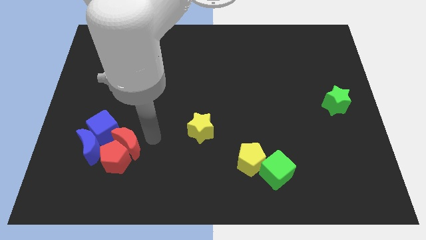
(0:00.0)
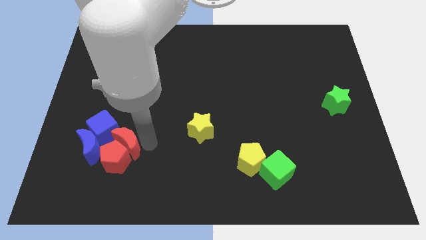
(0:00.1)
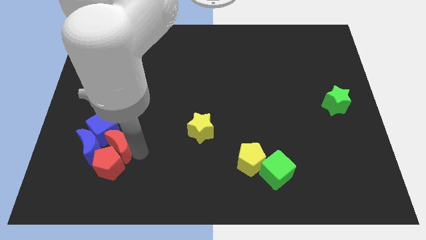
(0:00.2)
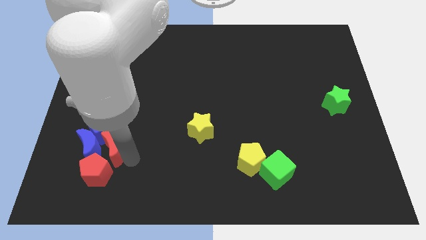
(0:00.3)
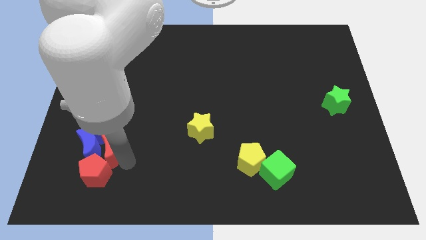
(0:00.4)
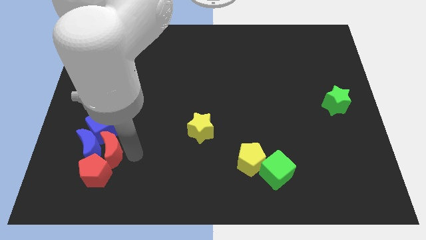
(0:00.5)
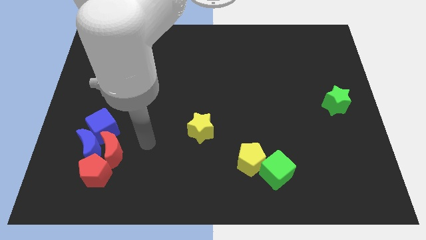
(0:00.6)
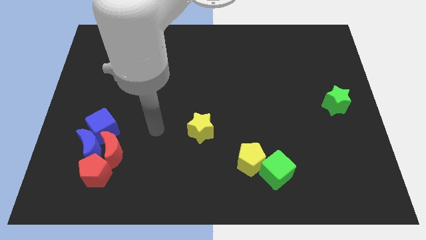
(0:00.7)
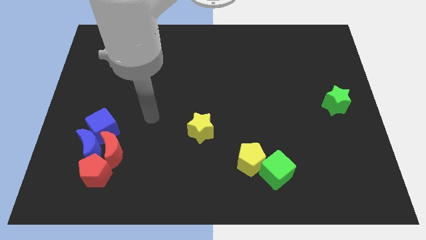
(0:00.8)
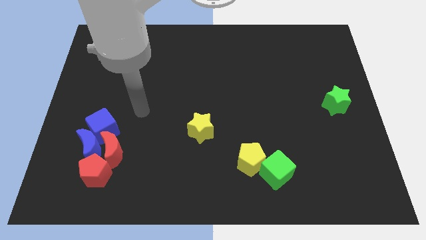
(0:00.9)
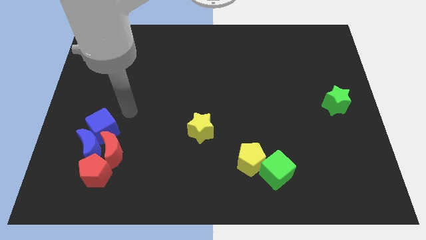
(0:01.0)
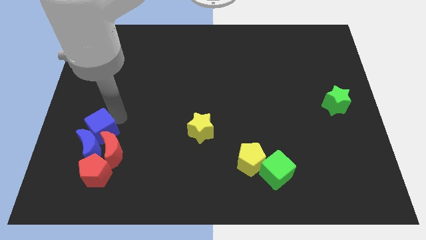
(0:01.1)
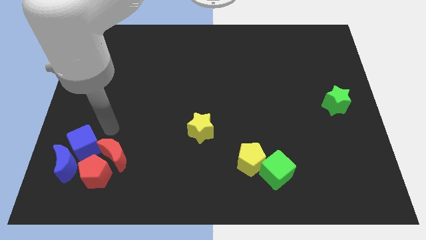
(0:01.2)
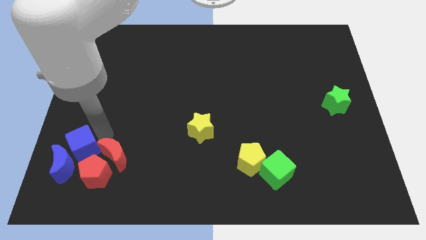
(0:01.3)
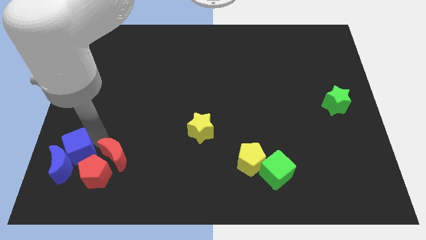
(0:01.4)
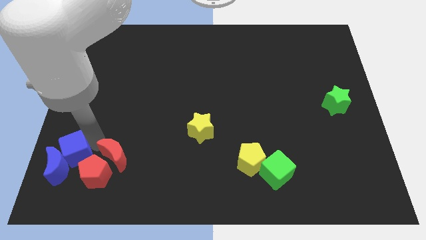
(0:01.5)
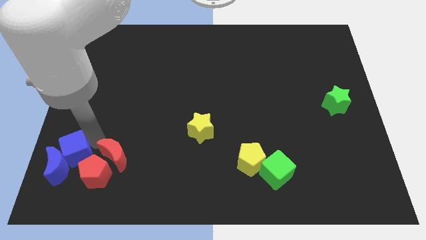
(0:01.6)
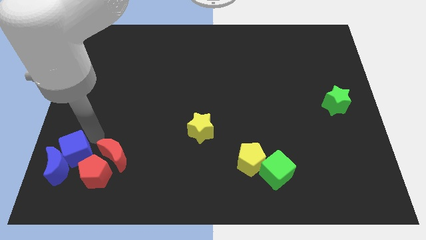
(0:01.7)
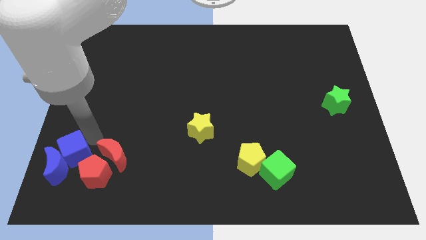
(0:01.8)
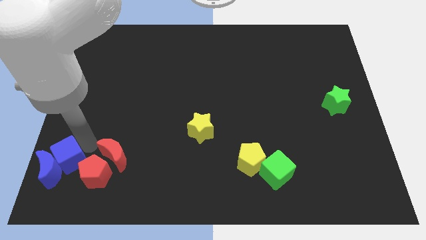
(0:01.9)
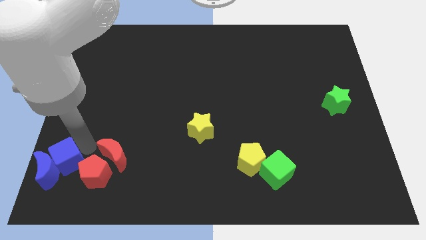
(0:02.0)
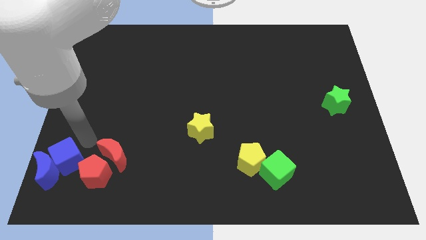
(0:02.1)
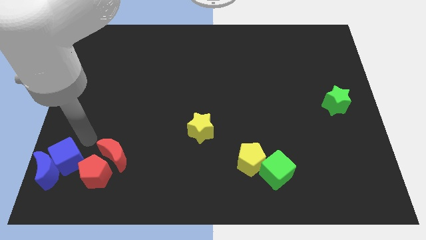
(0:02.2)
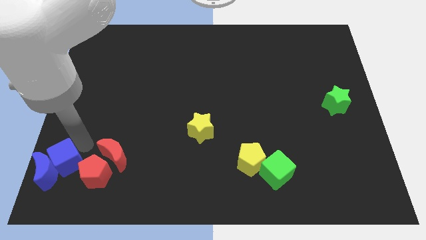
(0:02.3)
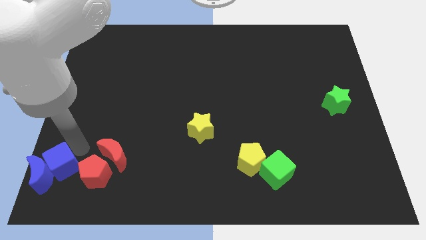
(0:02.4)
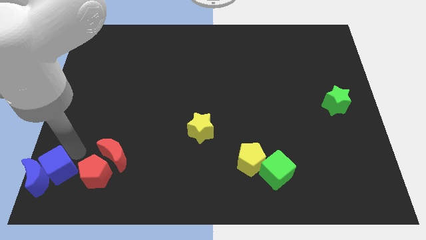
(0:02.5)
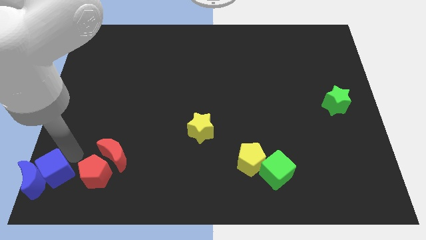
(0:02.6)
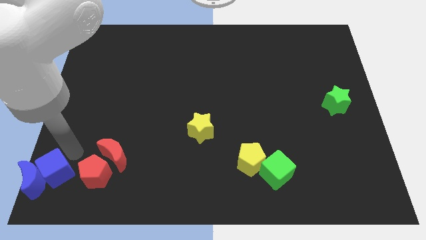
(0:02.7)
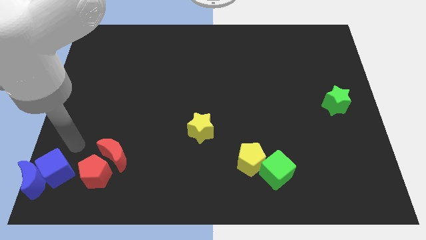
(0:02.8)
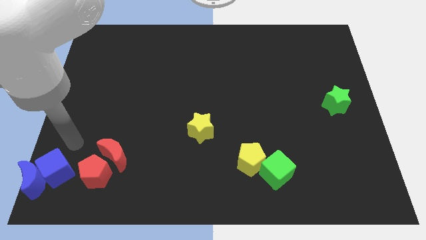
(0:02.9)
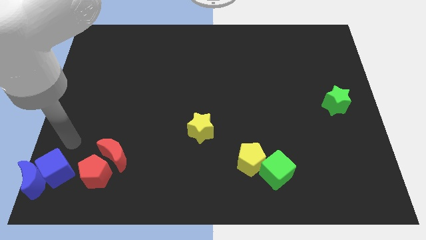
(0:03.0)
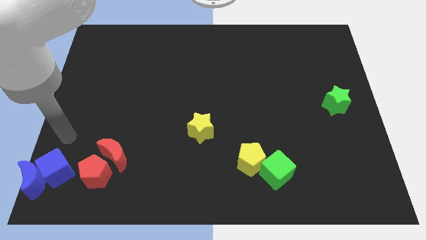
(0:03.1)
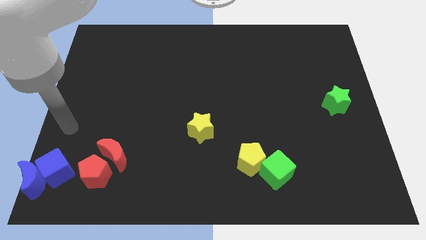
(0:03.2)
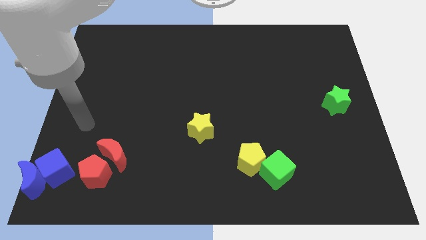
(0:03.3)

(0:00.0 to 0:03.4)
slide the blue cube and blue crescent towards the bottom left corner of the board

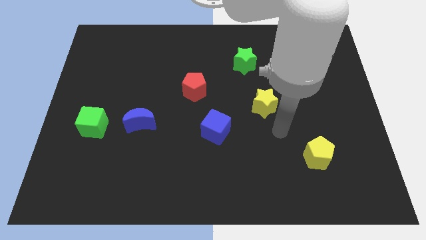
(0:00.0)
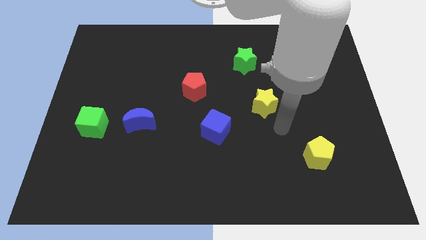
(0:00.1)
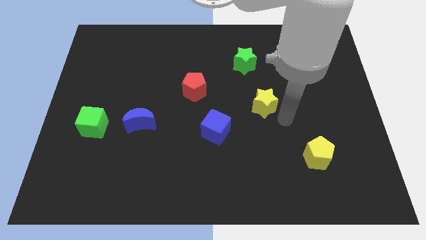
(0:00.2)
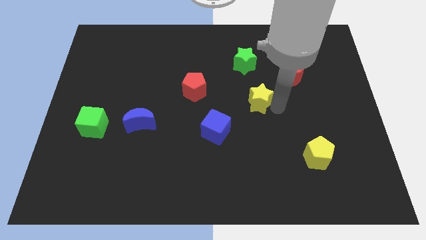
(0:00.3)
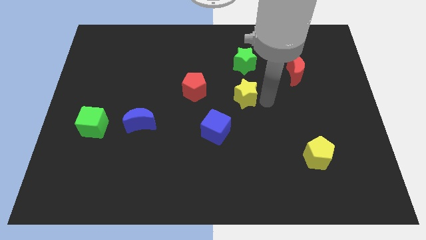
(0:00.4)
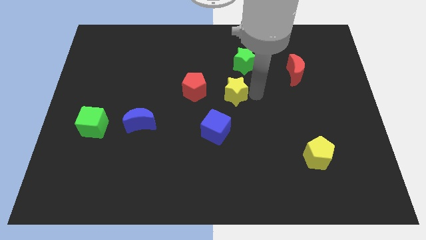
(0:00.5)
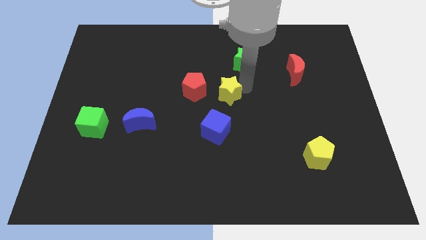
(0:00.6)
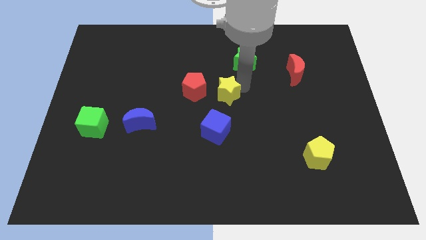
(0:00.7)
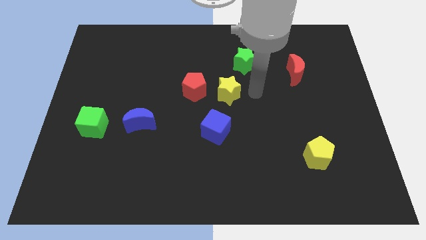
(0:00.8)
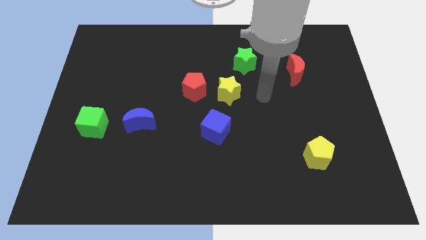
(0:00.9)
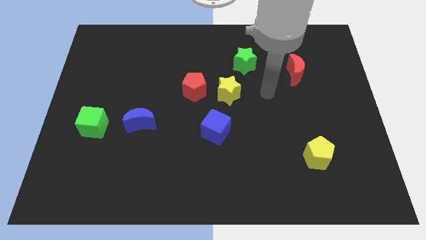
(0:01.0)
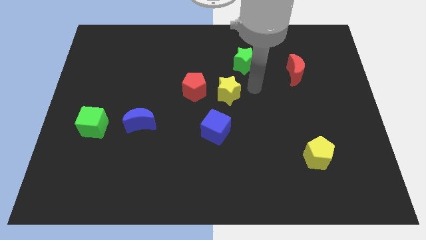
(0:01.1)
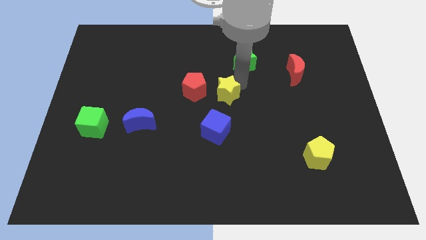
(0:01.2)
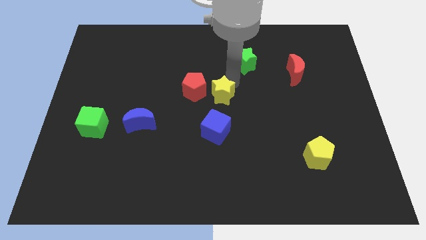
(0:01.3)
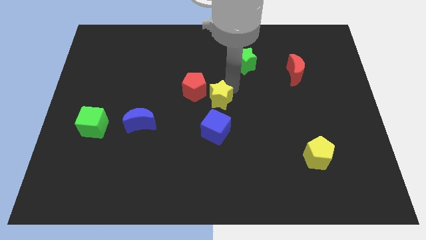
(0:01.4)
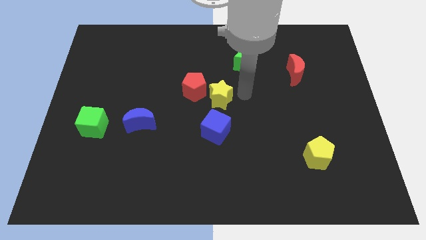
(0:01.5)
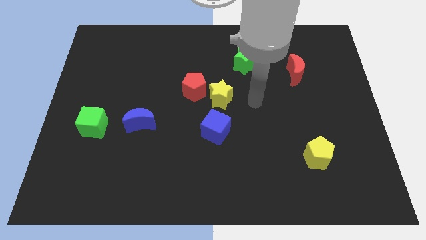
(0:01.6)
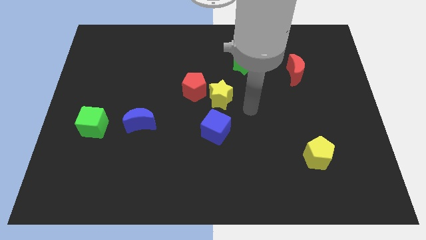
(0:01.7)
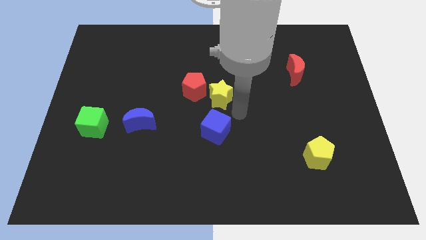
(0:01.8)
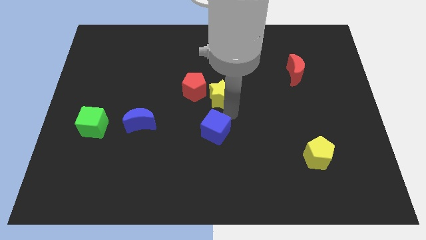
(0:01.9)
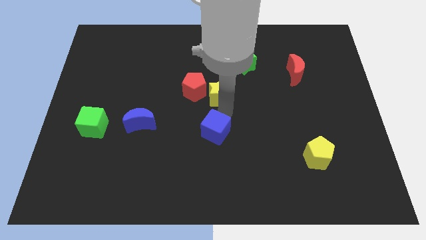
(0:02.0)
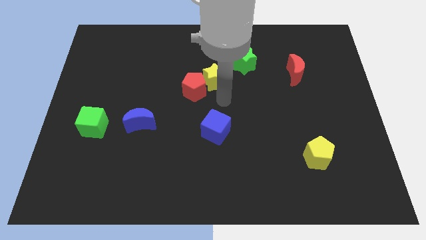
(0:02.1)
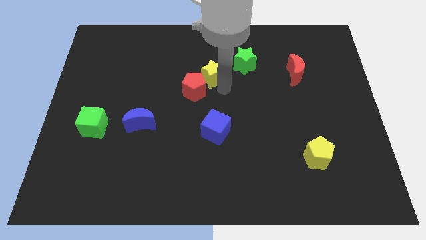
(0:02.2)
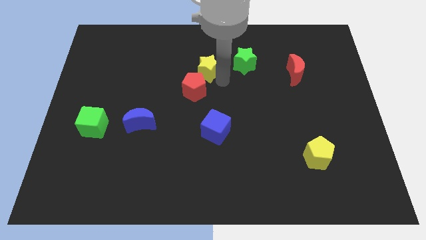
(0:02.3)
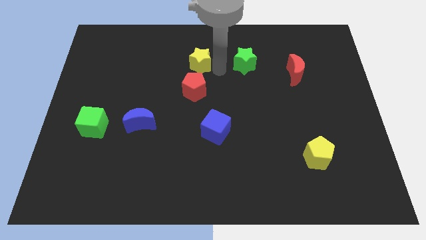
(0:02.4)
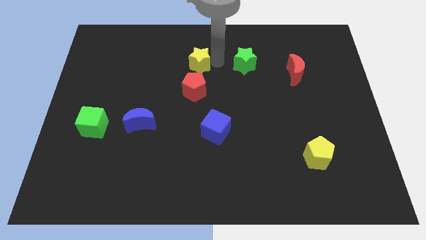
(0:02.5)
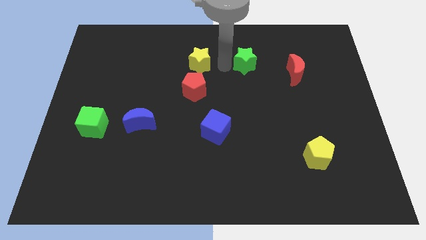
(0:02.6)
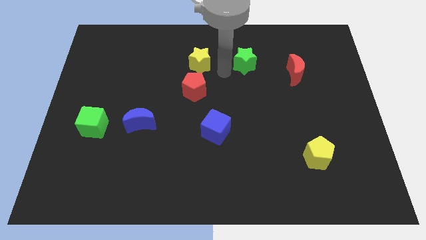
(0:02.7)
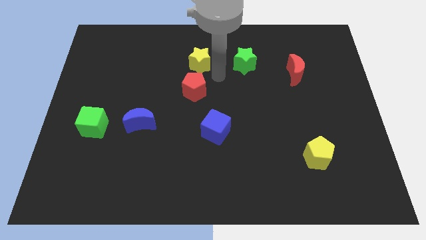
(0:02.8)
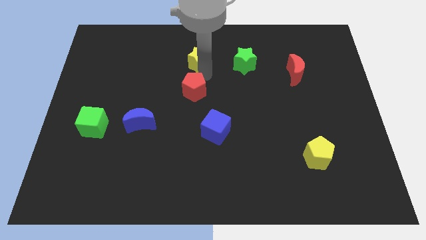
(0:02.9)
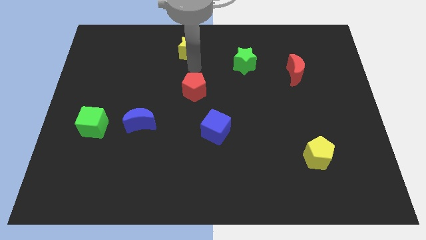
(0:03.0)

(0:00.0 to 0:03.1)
push the yellow star to the top side of the red pentagon

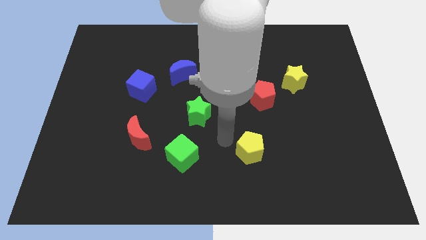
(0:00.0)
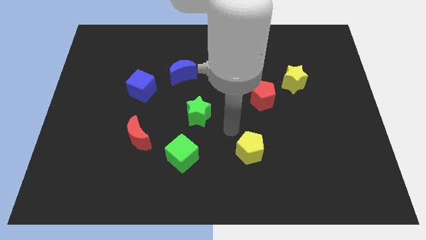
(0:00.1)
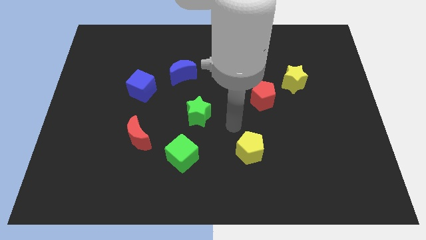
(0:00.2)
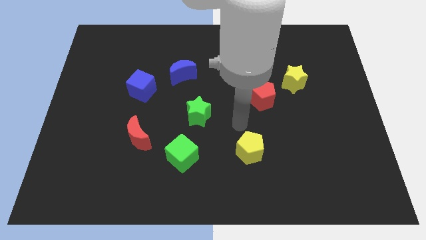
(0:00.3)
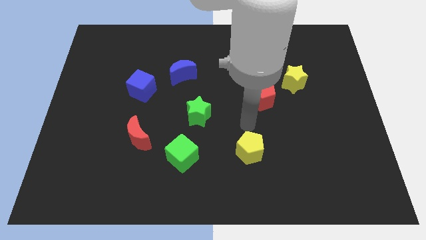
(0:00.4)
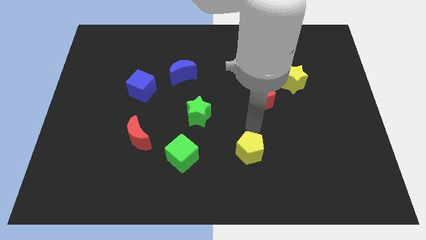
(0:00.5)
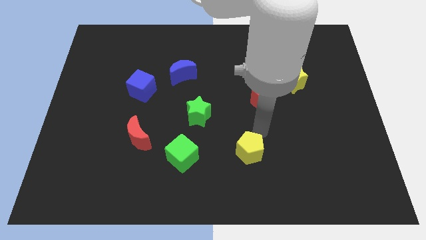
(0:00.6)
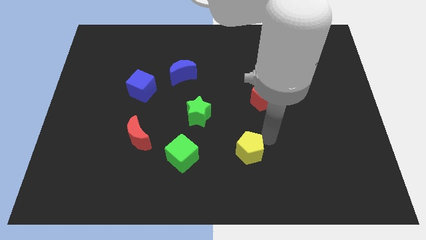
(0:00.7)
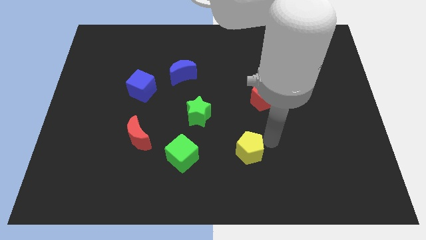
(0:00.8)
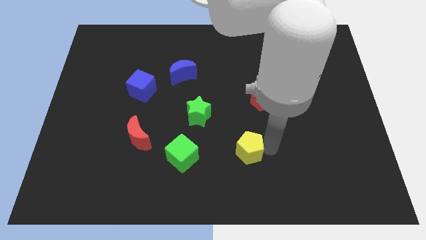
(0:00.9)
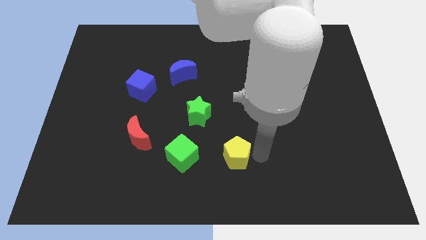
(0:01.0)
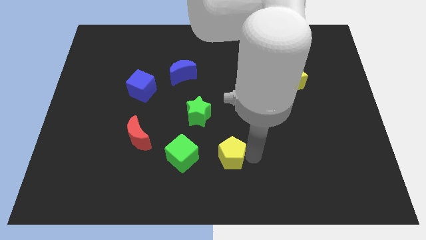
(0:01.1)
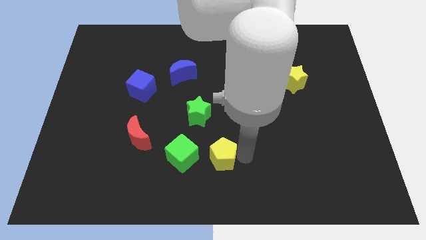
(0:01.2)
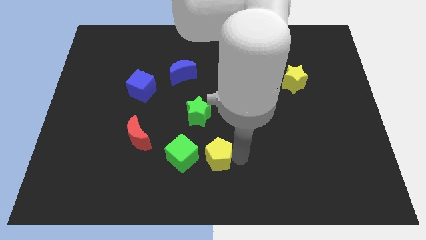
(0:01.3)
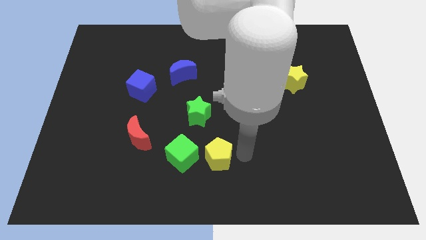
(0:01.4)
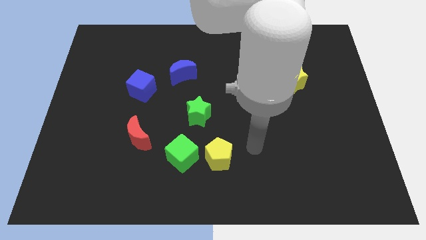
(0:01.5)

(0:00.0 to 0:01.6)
drag the yellow pentagon right side of the green cube

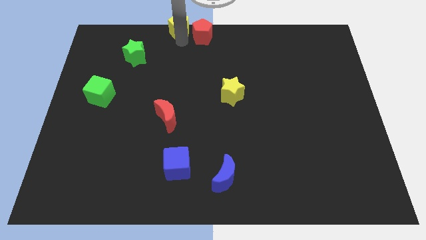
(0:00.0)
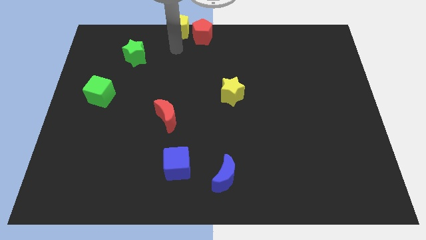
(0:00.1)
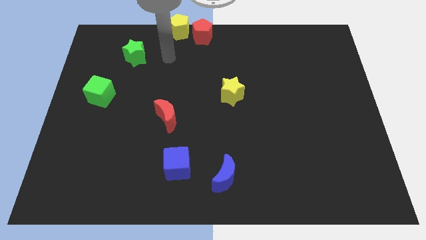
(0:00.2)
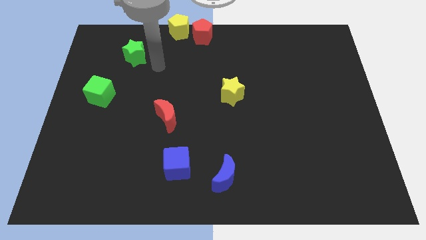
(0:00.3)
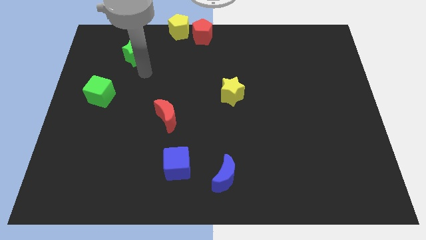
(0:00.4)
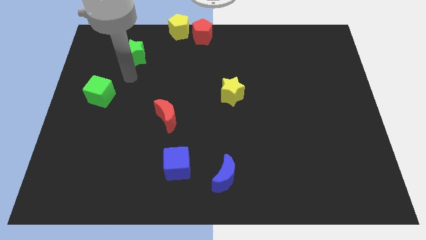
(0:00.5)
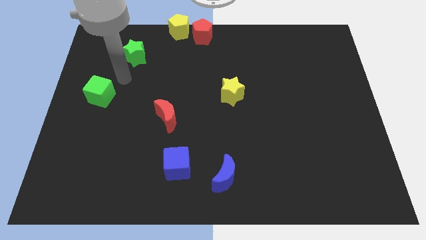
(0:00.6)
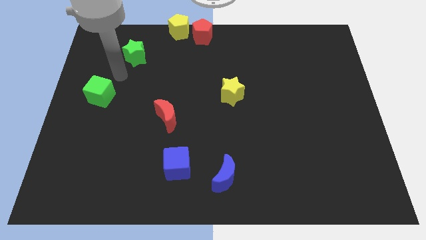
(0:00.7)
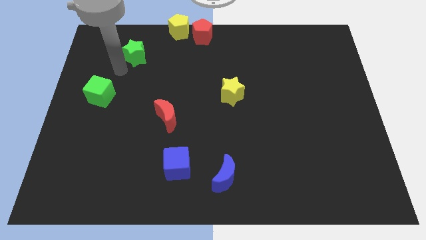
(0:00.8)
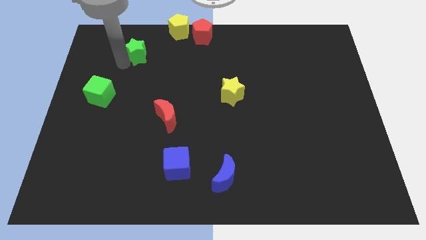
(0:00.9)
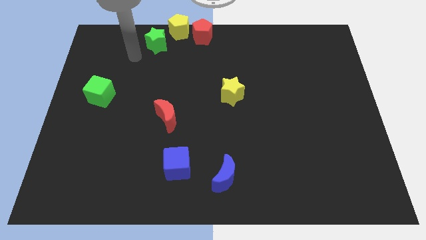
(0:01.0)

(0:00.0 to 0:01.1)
push the green star slightly to the top
